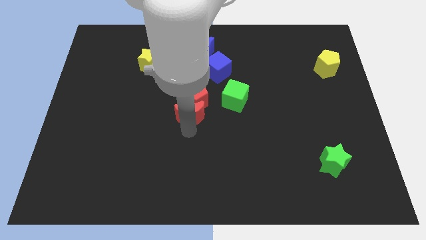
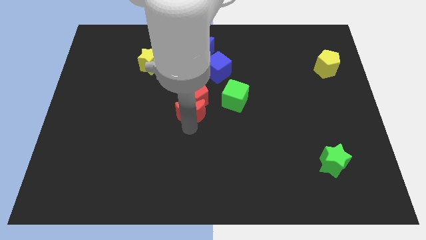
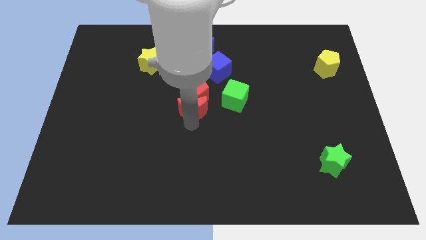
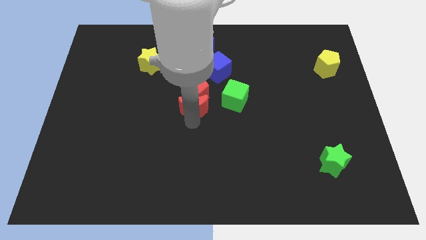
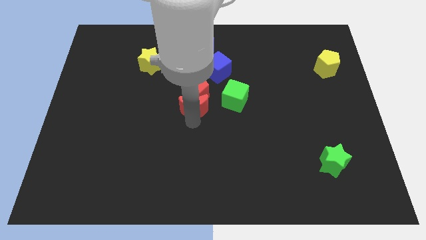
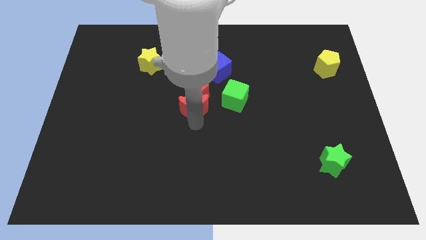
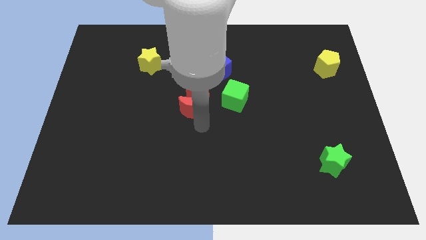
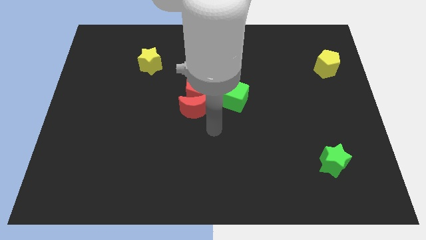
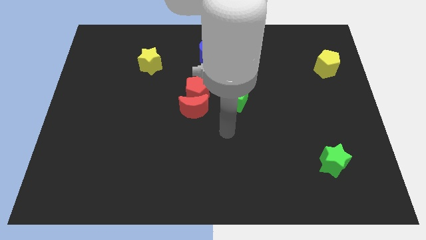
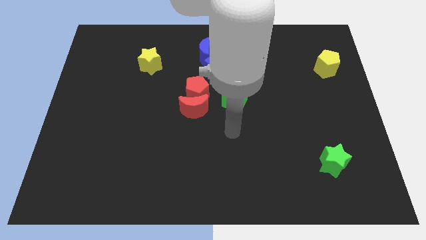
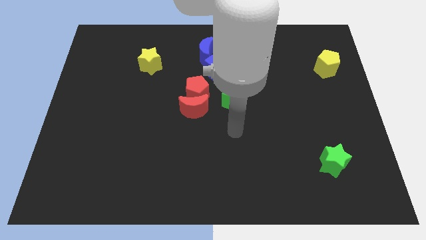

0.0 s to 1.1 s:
slide red blocks to the center

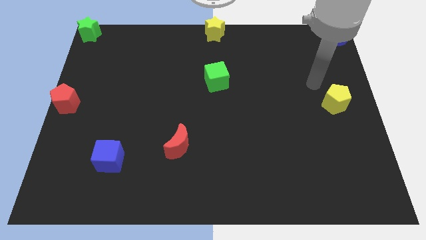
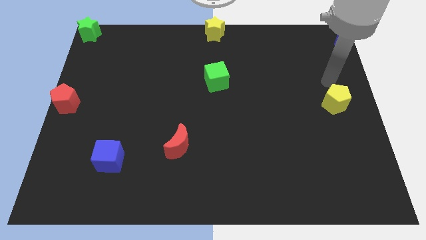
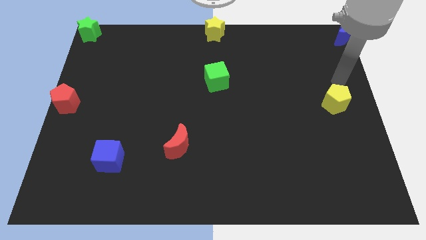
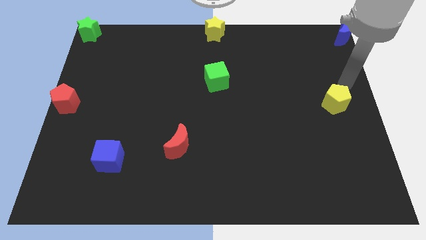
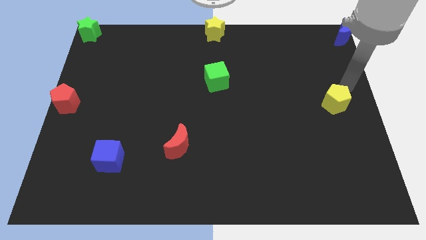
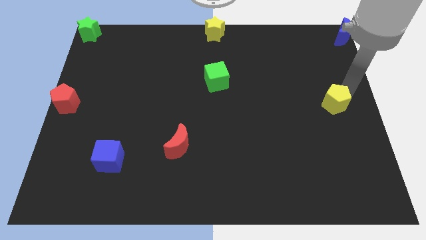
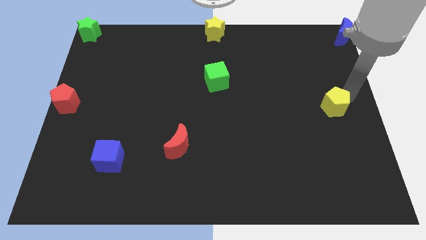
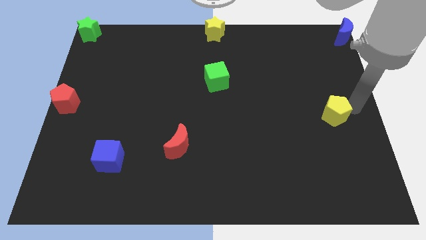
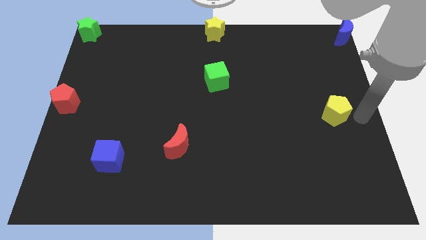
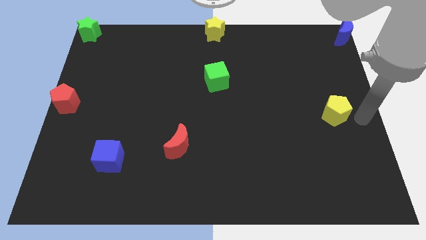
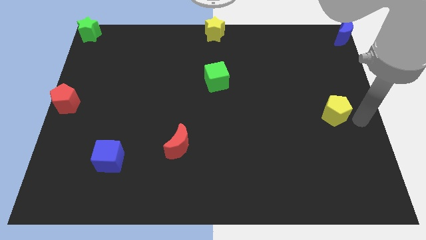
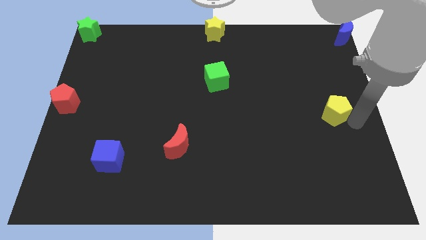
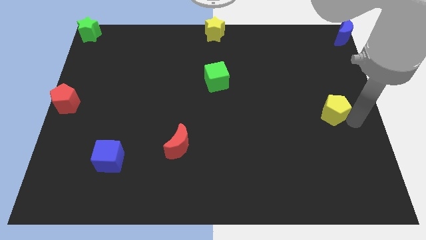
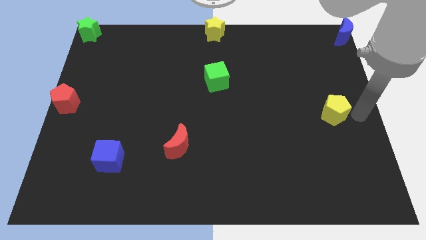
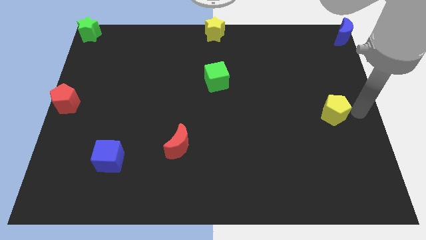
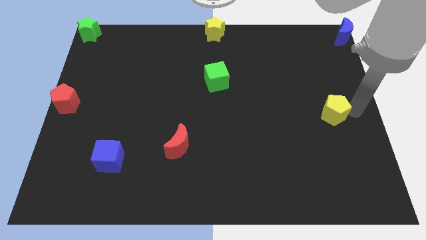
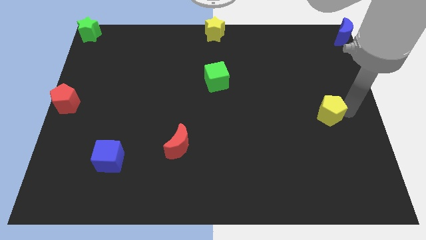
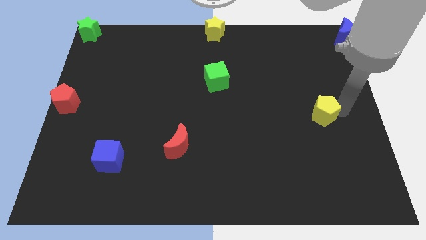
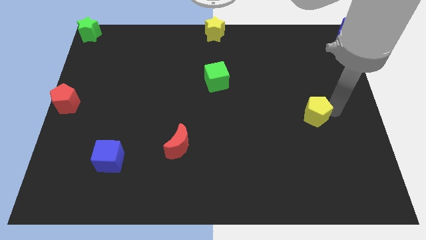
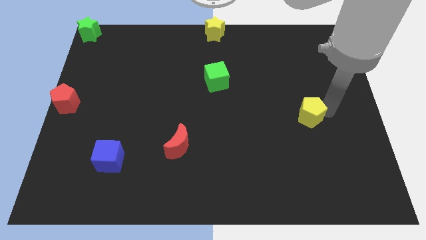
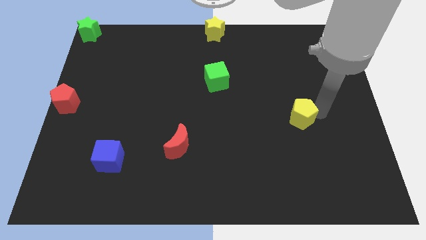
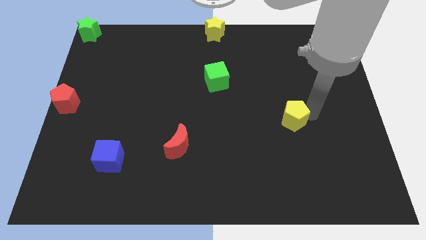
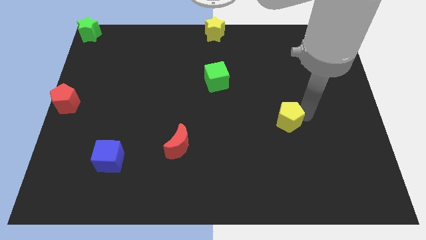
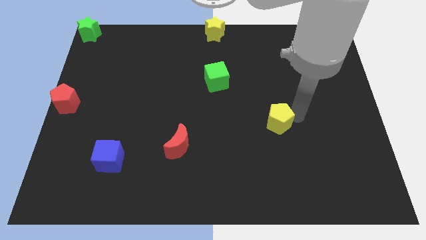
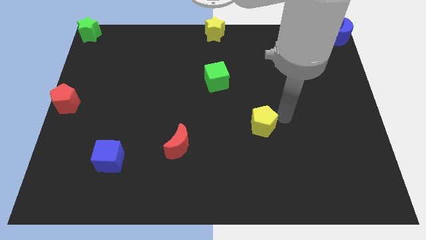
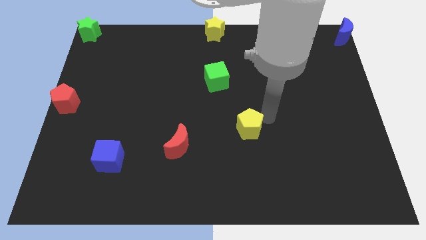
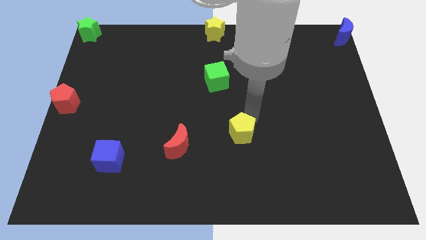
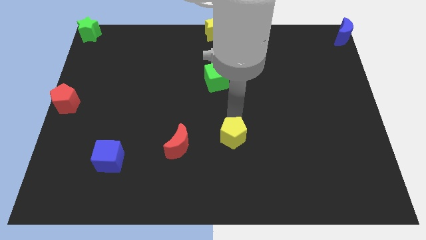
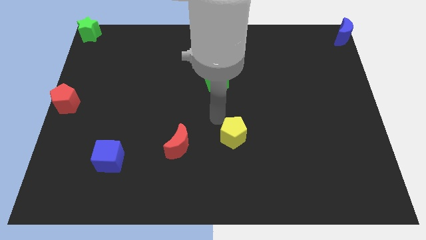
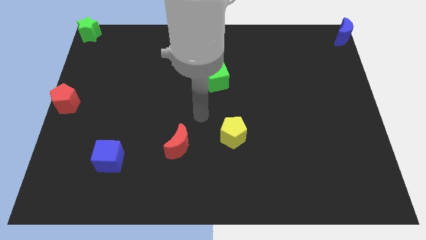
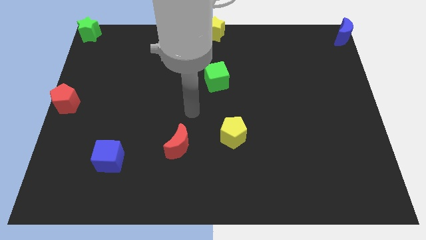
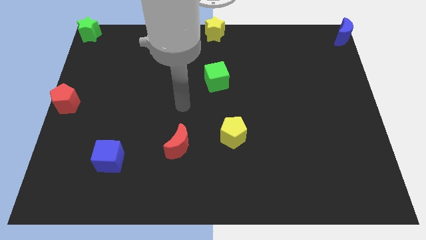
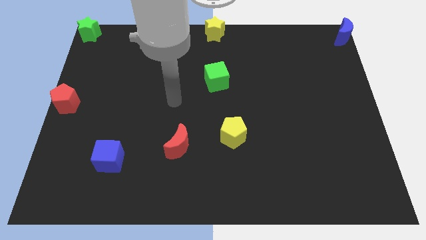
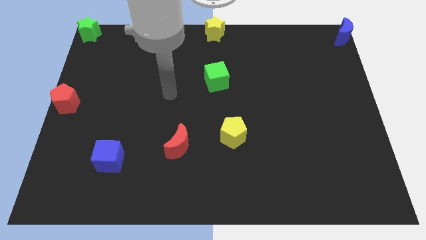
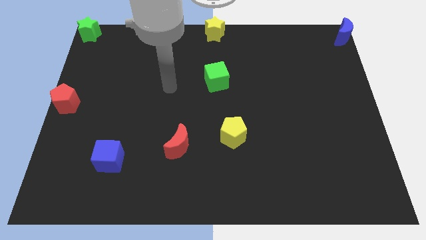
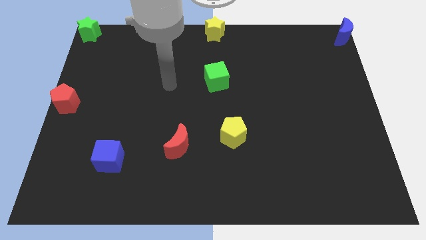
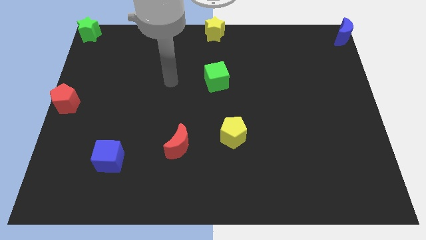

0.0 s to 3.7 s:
push the yellow pentagon to the bottom right of the green cube

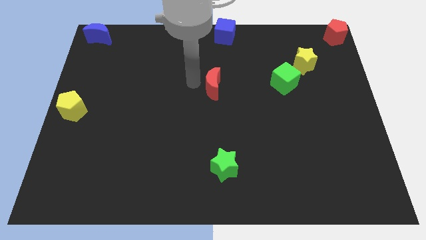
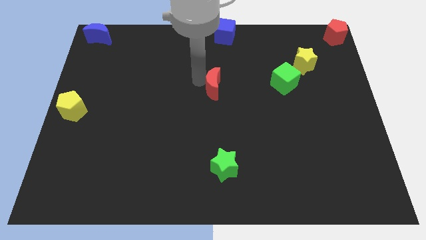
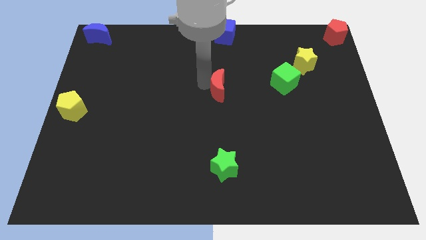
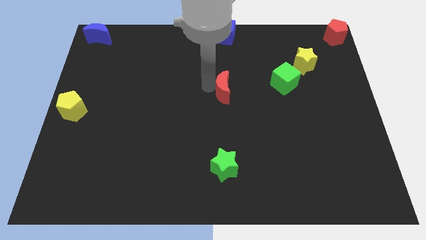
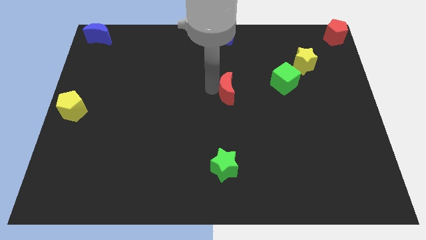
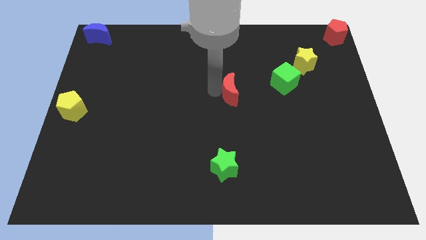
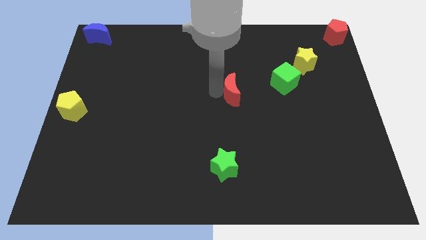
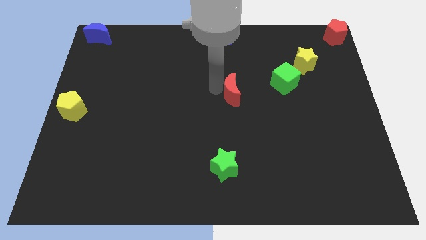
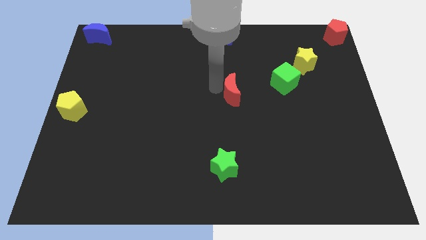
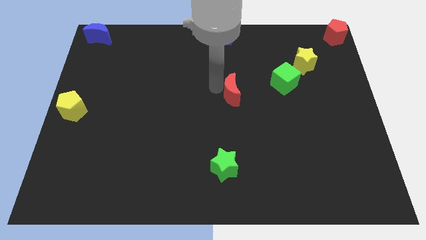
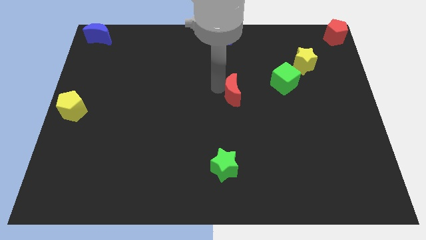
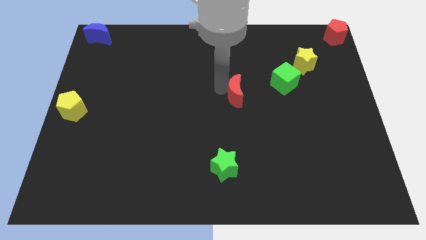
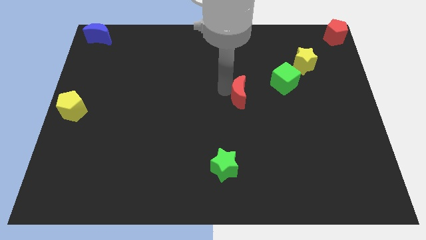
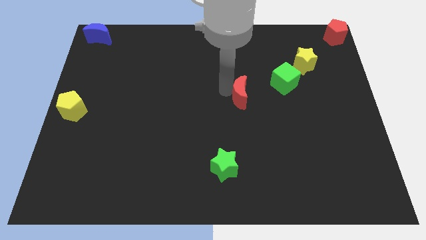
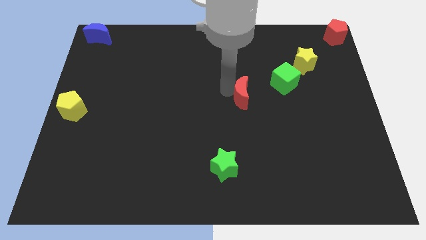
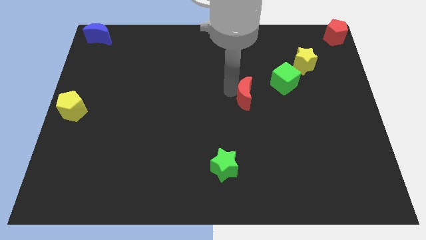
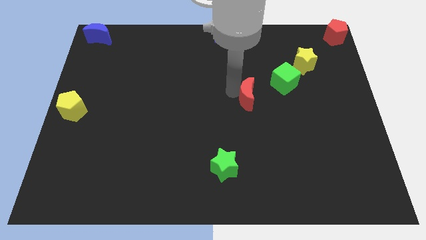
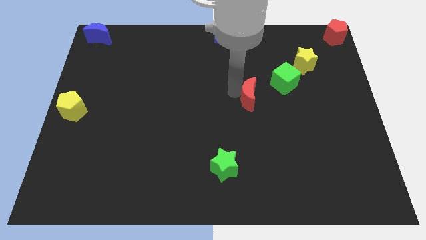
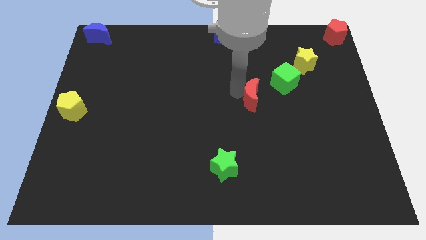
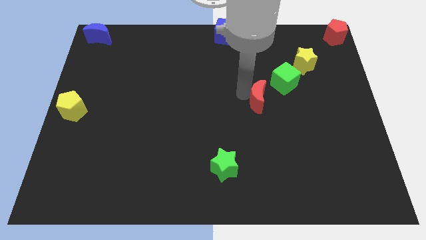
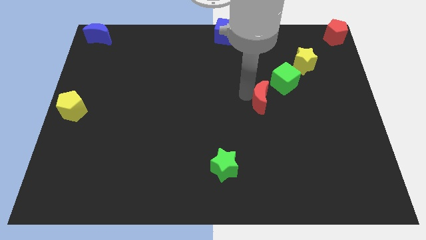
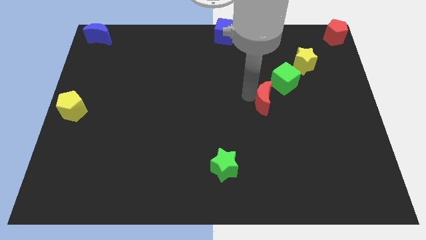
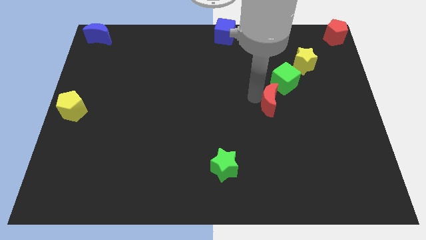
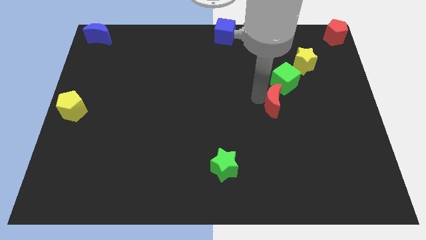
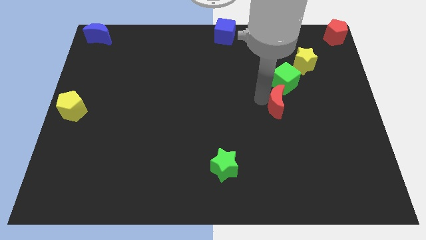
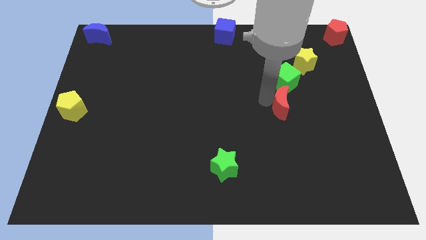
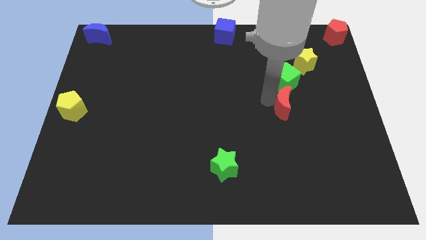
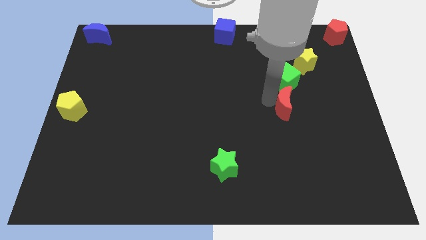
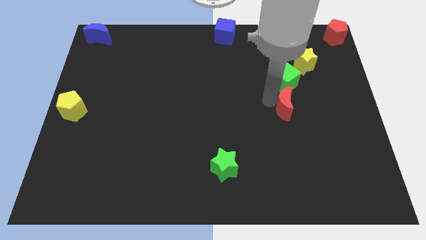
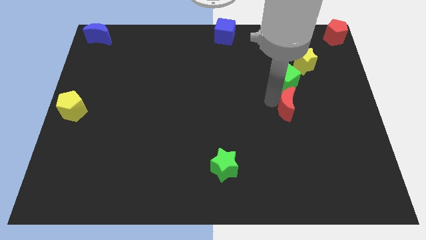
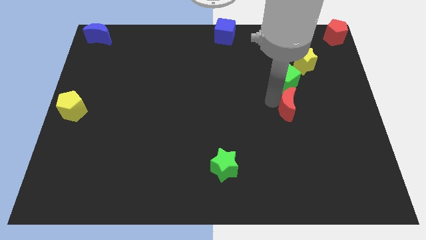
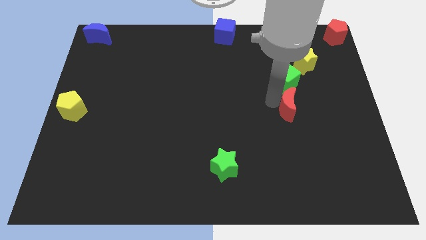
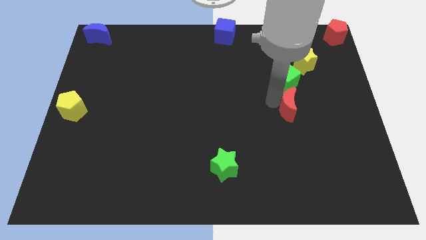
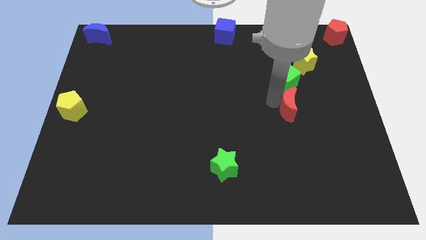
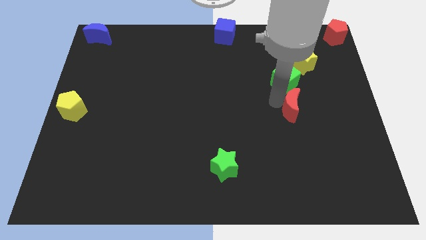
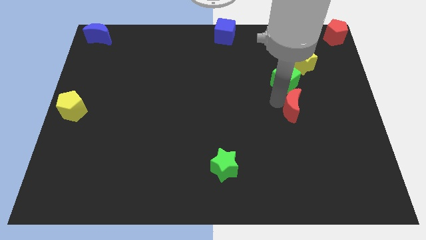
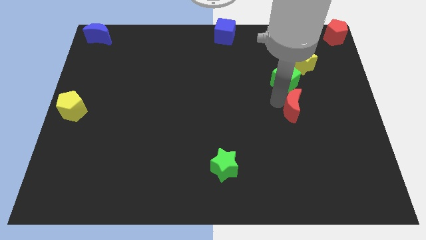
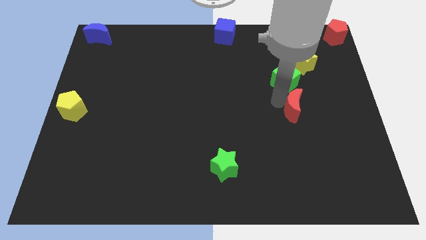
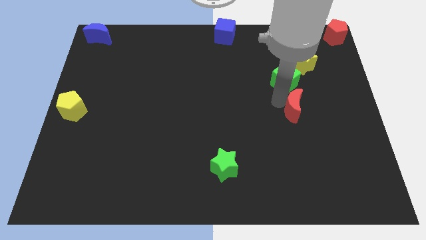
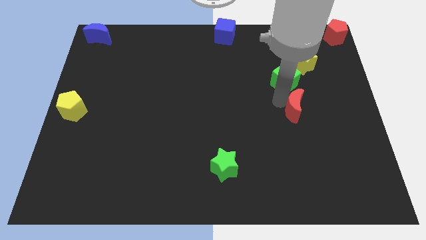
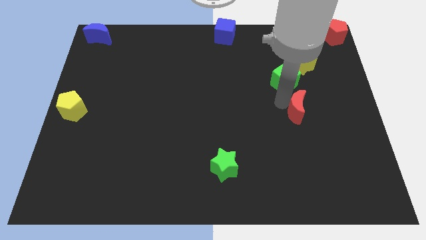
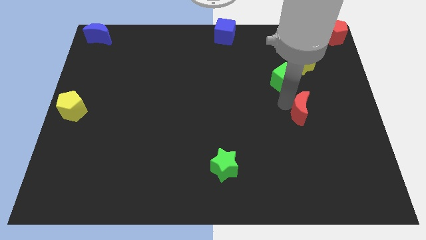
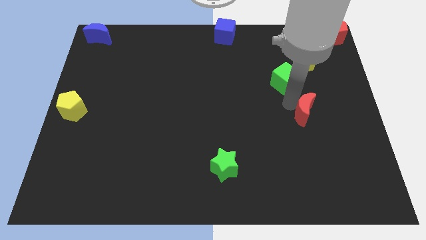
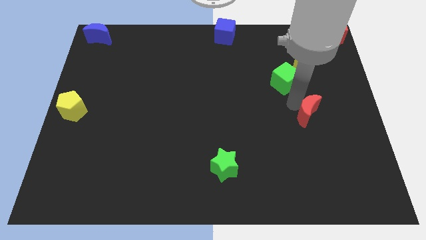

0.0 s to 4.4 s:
place the red moon below the green cube
